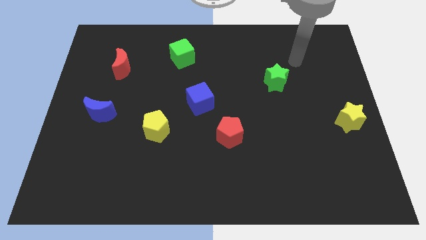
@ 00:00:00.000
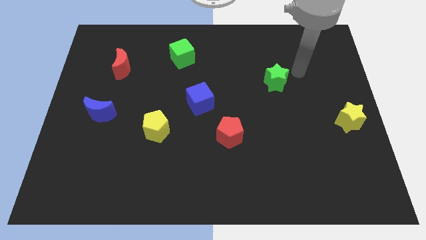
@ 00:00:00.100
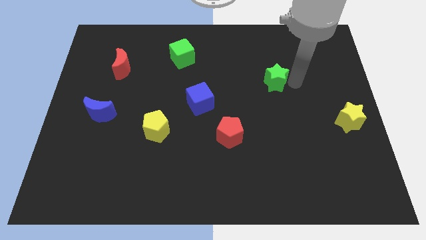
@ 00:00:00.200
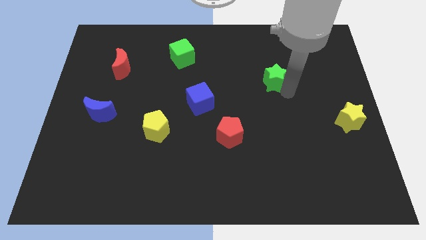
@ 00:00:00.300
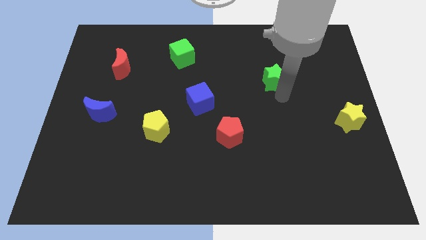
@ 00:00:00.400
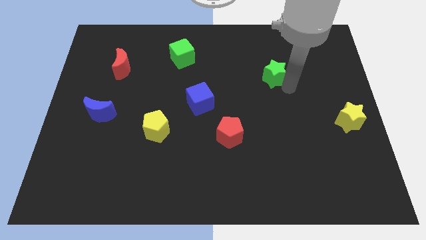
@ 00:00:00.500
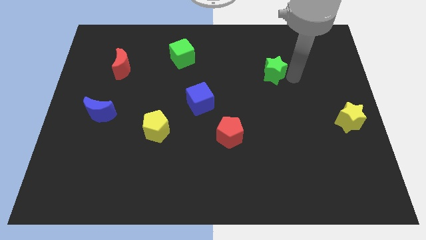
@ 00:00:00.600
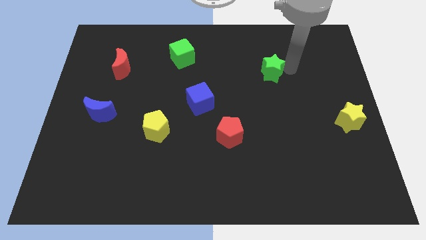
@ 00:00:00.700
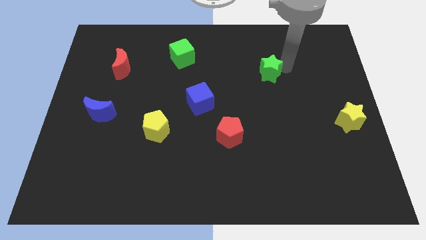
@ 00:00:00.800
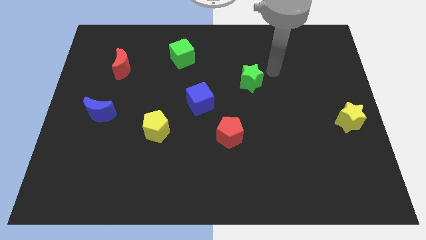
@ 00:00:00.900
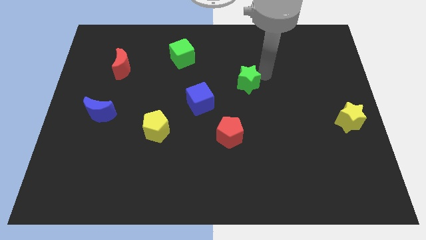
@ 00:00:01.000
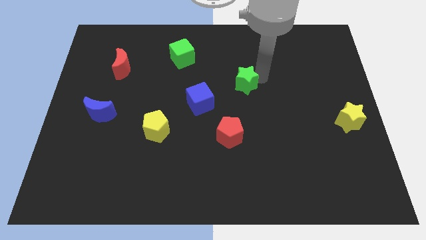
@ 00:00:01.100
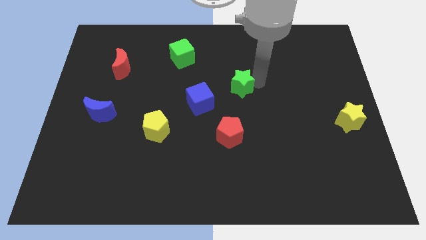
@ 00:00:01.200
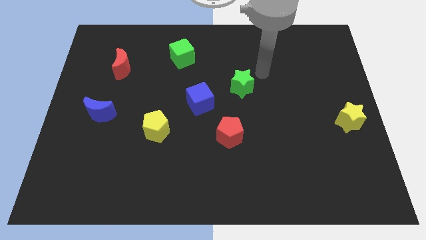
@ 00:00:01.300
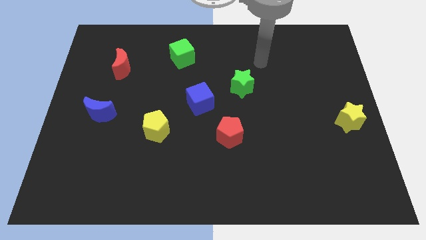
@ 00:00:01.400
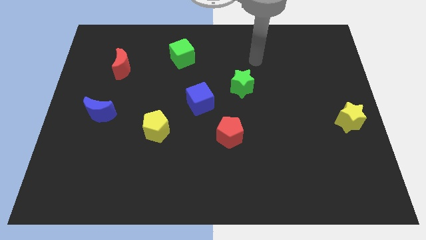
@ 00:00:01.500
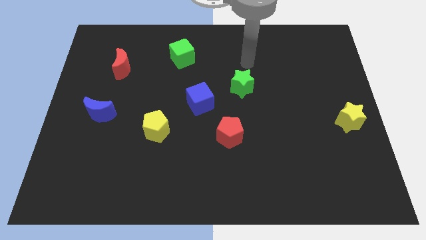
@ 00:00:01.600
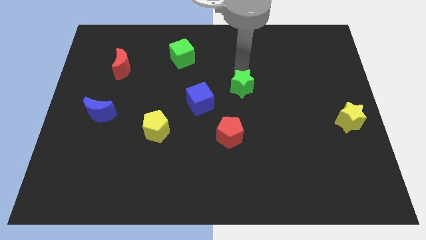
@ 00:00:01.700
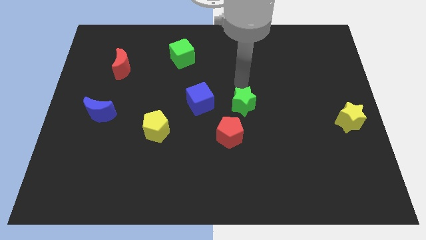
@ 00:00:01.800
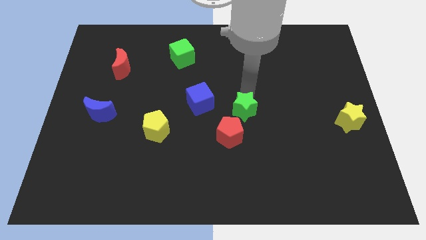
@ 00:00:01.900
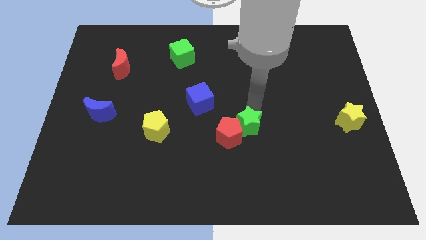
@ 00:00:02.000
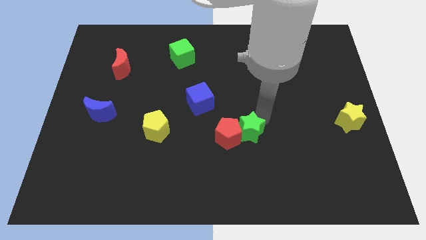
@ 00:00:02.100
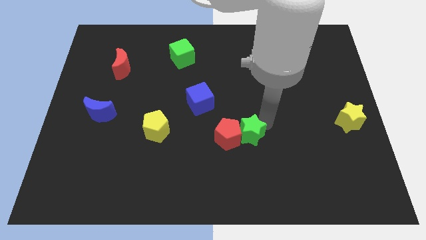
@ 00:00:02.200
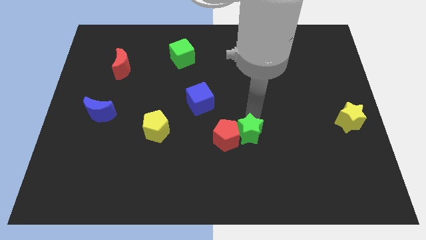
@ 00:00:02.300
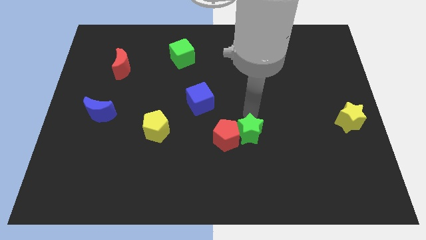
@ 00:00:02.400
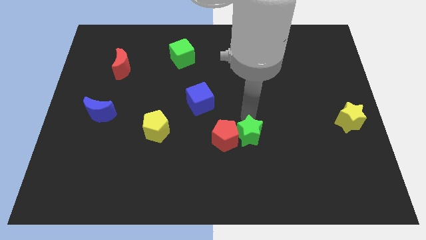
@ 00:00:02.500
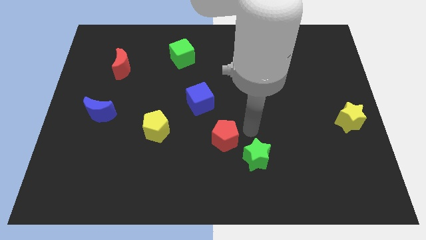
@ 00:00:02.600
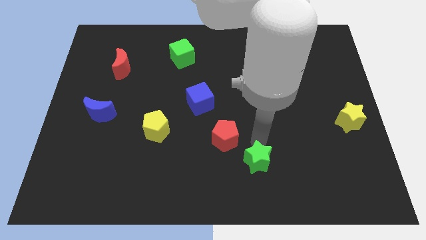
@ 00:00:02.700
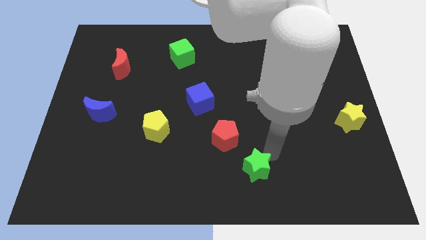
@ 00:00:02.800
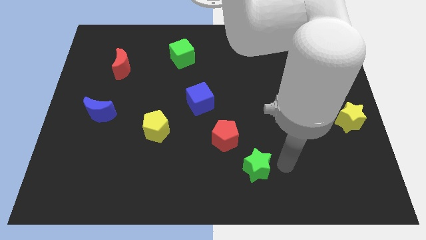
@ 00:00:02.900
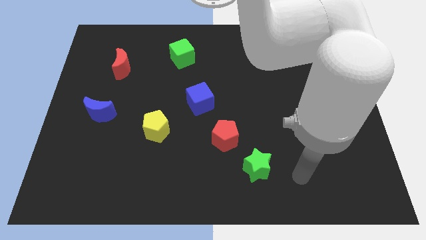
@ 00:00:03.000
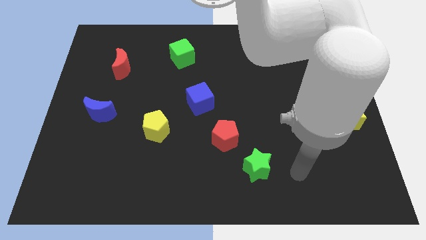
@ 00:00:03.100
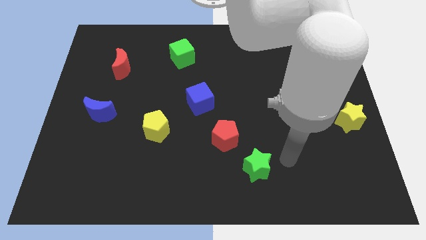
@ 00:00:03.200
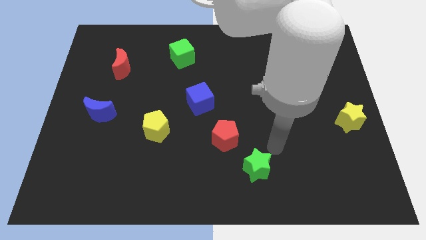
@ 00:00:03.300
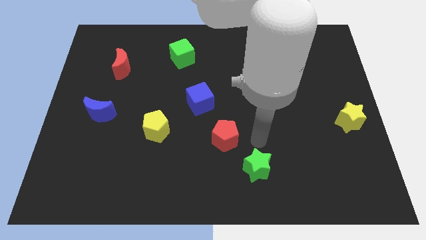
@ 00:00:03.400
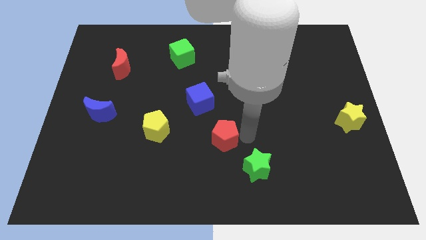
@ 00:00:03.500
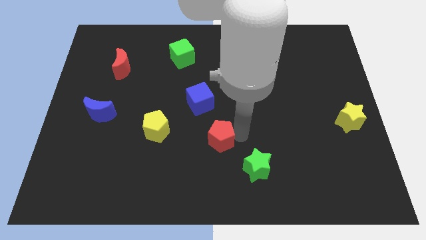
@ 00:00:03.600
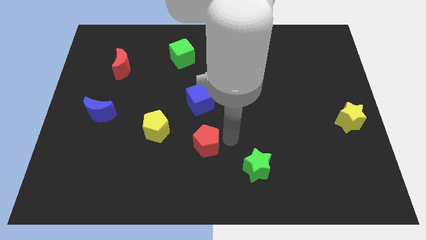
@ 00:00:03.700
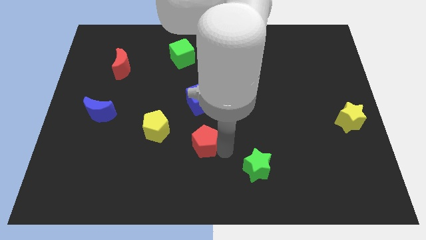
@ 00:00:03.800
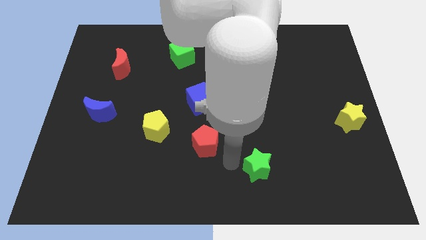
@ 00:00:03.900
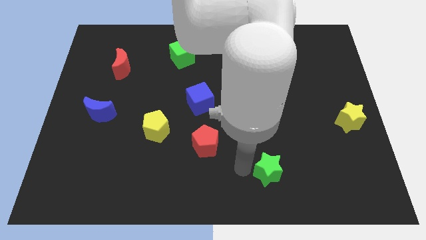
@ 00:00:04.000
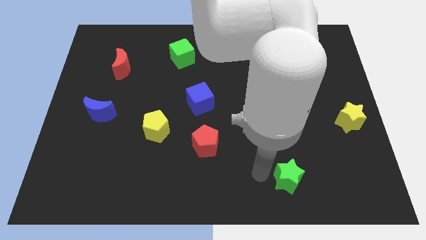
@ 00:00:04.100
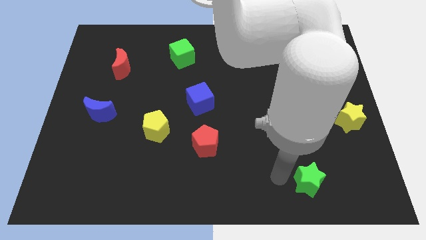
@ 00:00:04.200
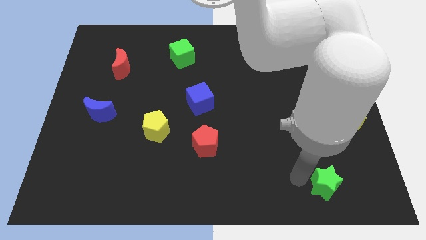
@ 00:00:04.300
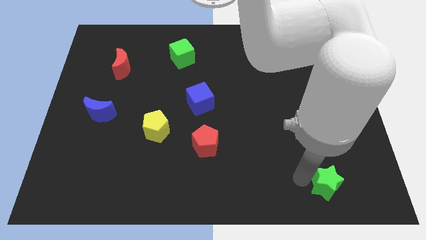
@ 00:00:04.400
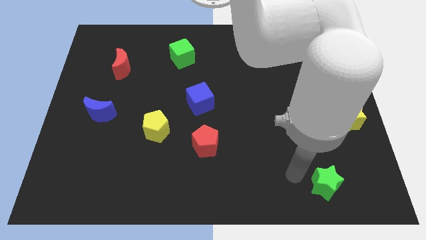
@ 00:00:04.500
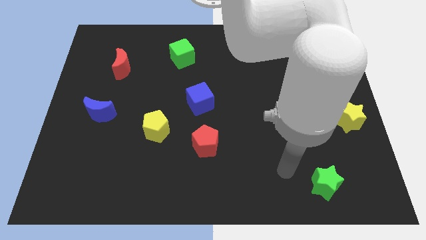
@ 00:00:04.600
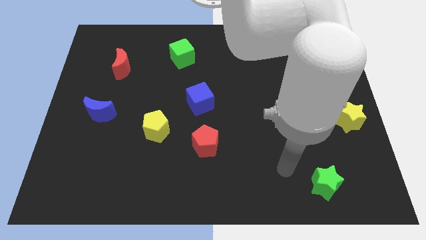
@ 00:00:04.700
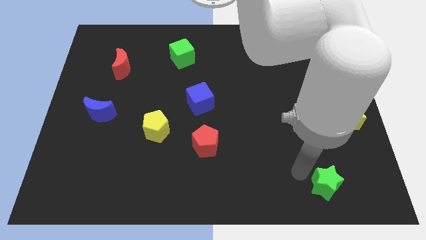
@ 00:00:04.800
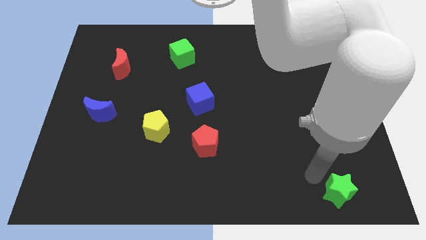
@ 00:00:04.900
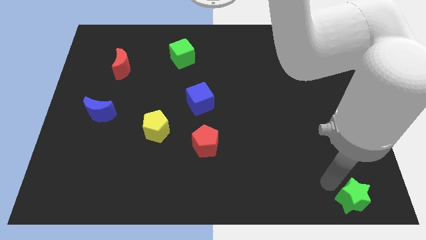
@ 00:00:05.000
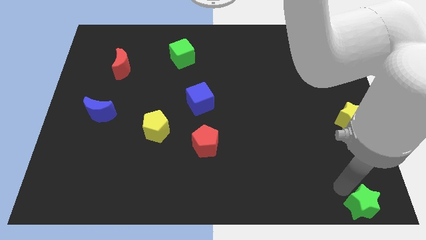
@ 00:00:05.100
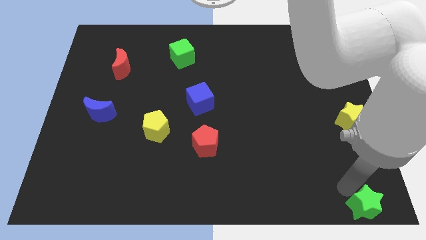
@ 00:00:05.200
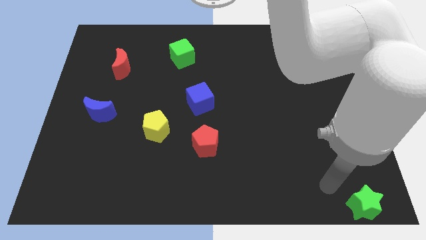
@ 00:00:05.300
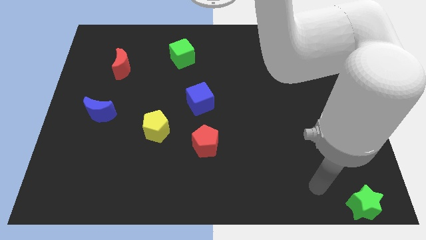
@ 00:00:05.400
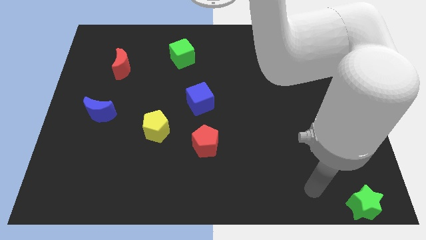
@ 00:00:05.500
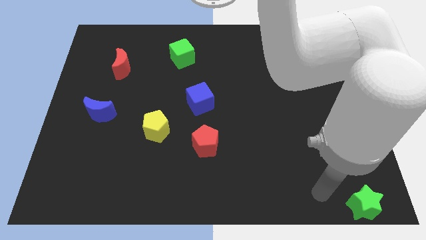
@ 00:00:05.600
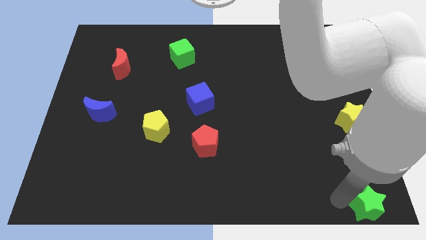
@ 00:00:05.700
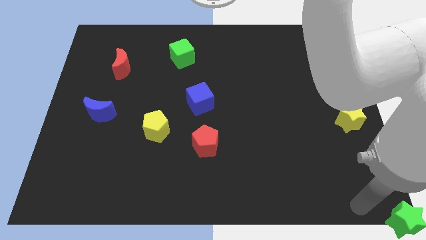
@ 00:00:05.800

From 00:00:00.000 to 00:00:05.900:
place the green star to the bottom right

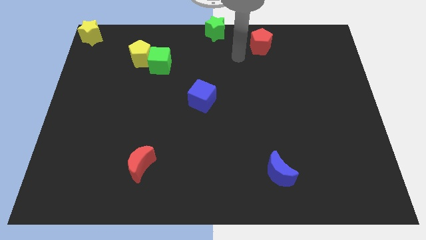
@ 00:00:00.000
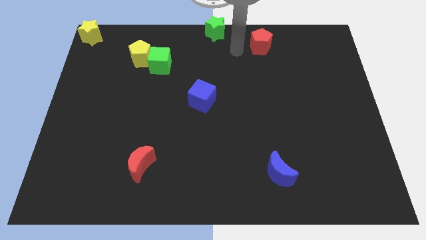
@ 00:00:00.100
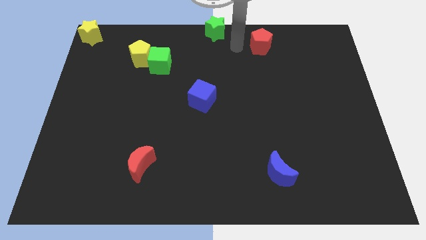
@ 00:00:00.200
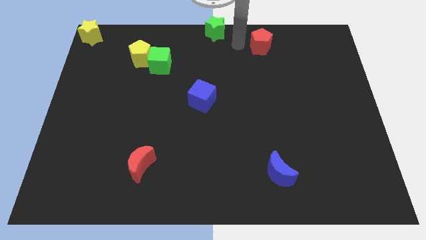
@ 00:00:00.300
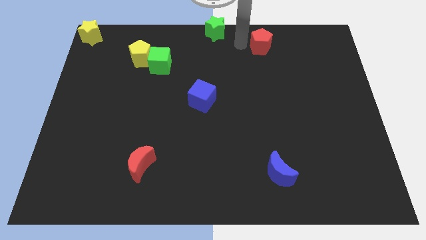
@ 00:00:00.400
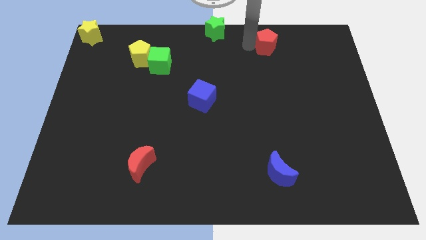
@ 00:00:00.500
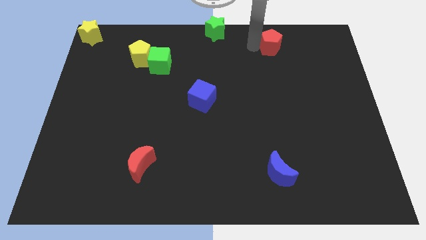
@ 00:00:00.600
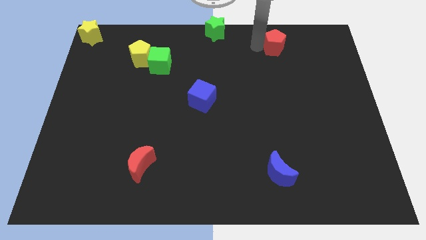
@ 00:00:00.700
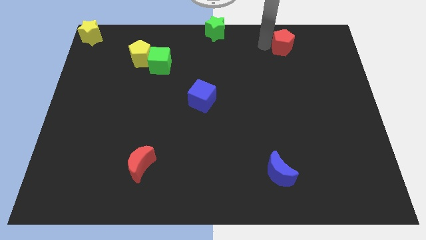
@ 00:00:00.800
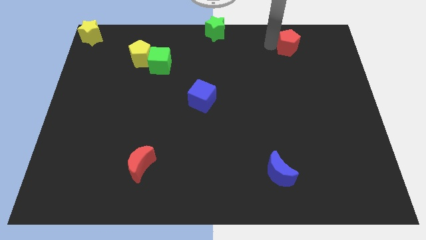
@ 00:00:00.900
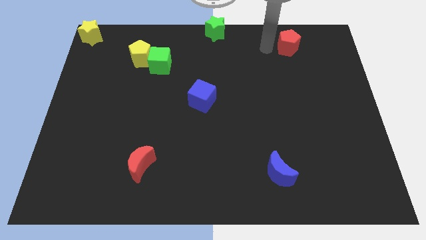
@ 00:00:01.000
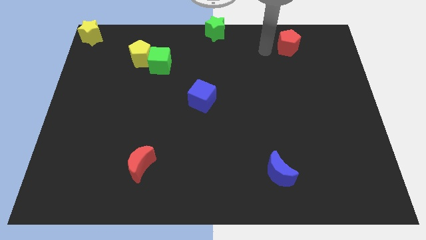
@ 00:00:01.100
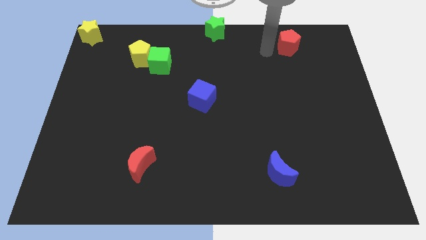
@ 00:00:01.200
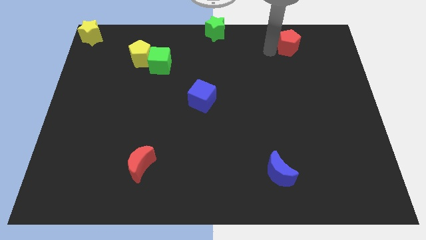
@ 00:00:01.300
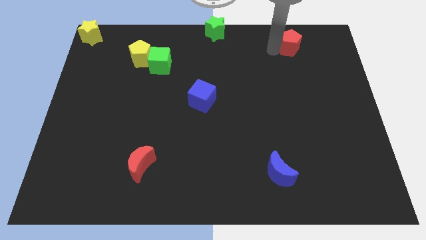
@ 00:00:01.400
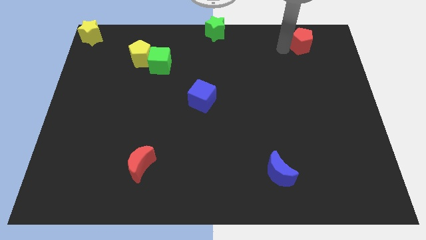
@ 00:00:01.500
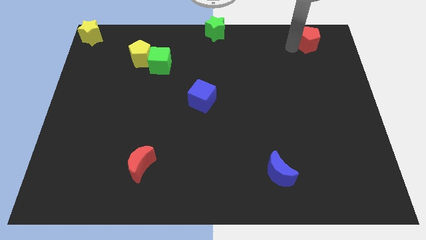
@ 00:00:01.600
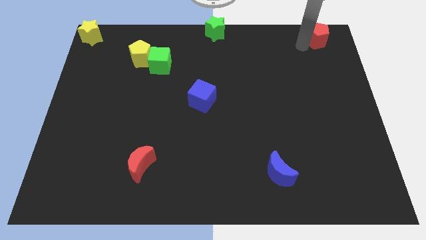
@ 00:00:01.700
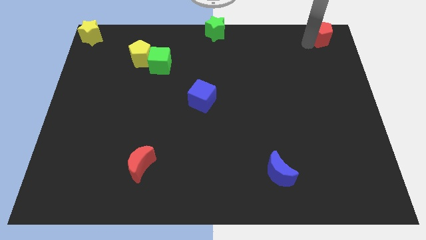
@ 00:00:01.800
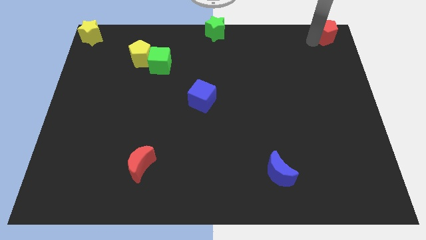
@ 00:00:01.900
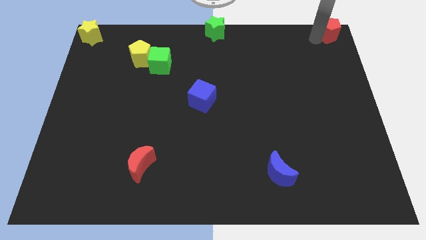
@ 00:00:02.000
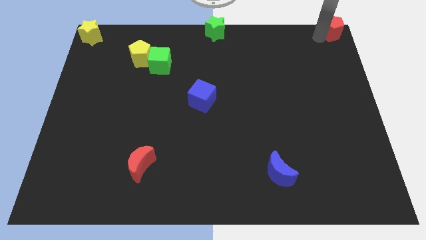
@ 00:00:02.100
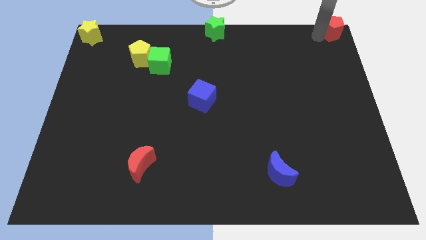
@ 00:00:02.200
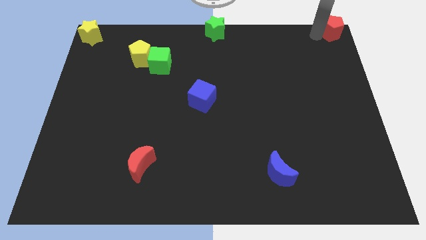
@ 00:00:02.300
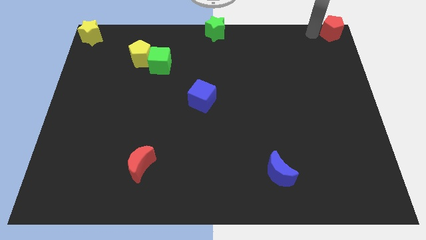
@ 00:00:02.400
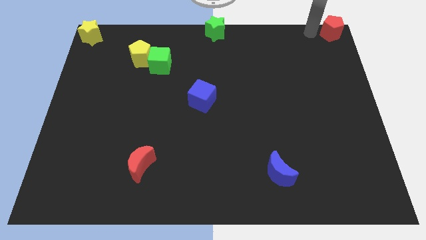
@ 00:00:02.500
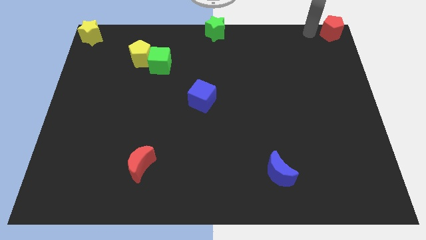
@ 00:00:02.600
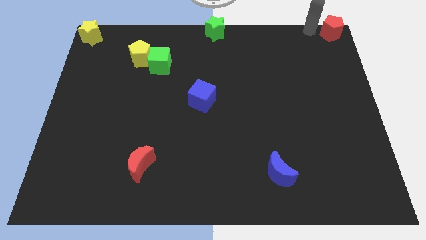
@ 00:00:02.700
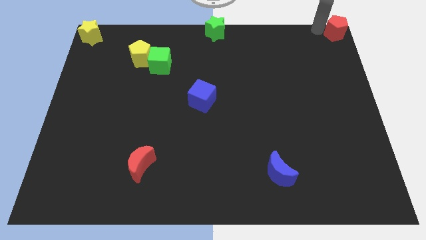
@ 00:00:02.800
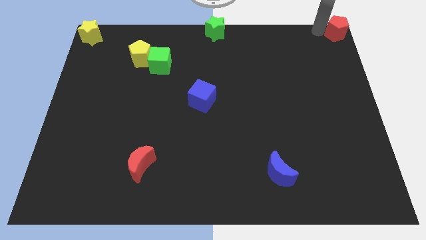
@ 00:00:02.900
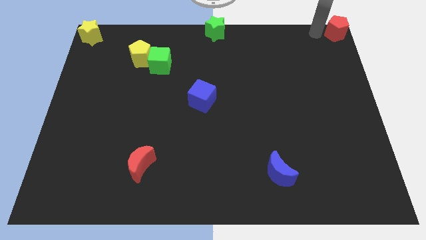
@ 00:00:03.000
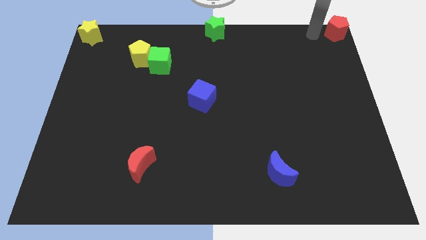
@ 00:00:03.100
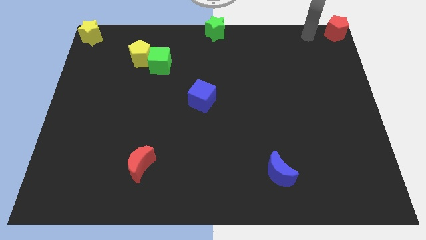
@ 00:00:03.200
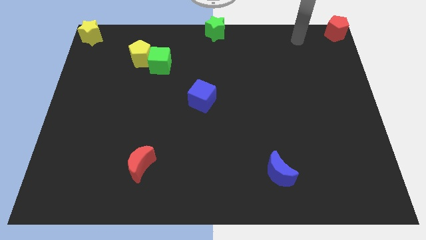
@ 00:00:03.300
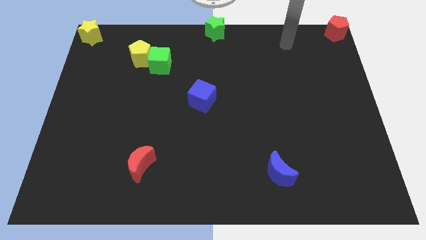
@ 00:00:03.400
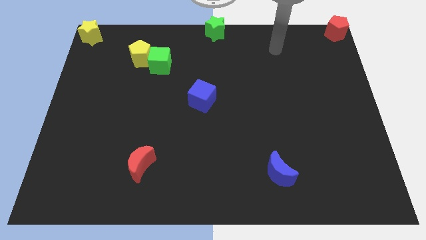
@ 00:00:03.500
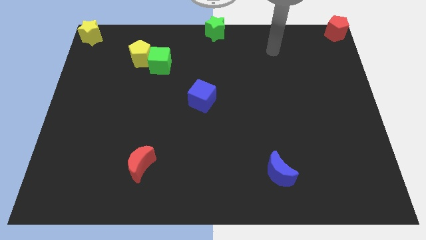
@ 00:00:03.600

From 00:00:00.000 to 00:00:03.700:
push the red pentagon towards the top right side corner of the board
